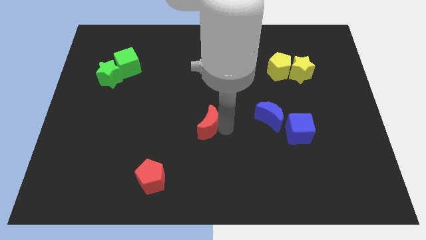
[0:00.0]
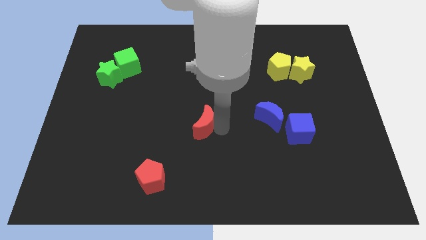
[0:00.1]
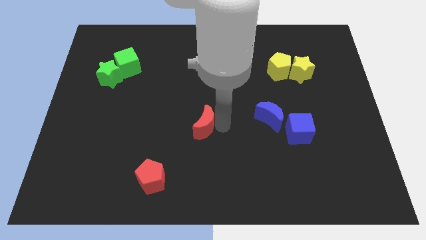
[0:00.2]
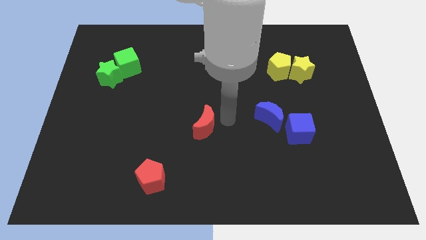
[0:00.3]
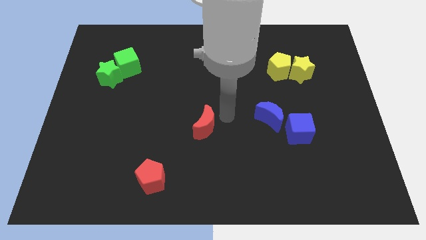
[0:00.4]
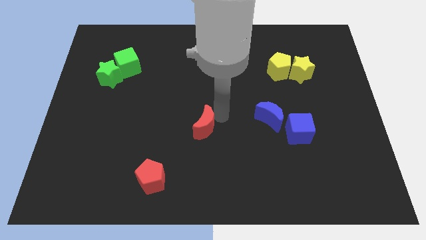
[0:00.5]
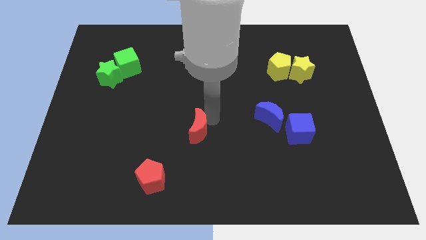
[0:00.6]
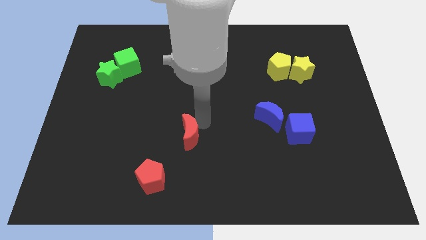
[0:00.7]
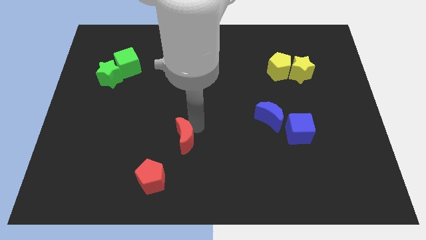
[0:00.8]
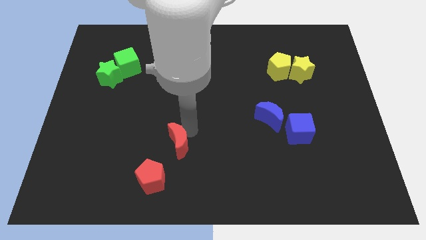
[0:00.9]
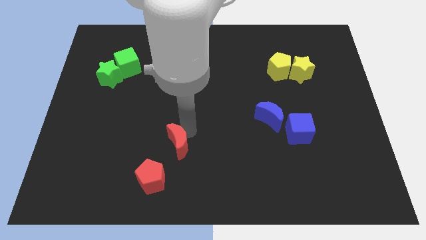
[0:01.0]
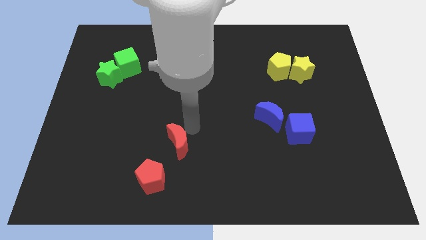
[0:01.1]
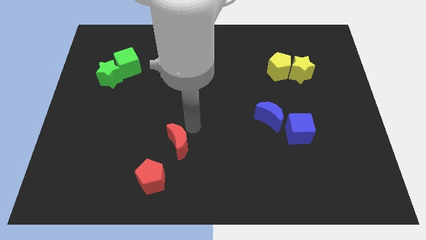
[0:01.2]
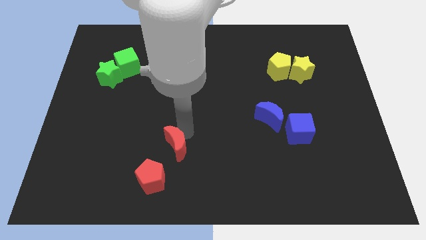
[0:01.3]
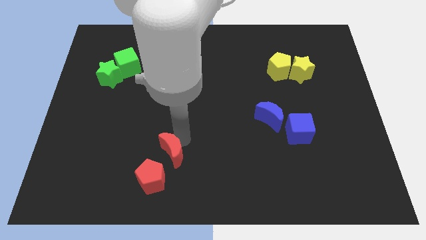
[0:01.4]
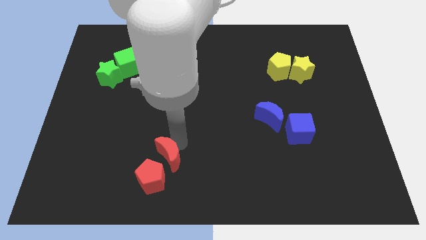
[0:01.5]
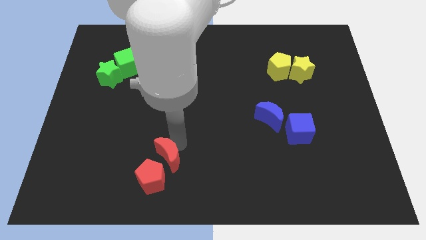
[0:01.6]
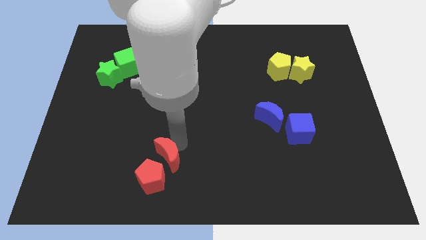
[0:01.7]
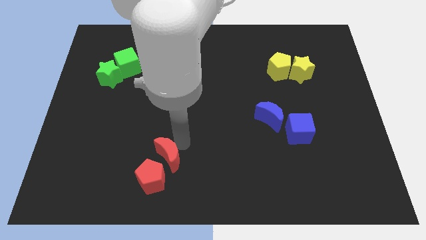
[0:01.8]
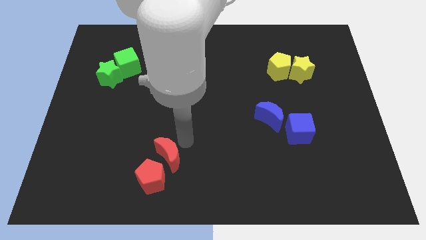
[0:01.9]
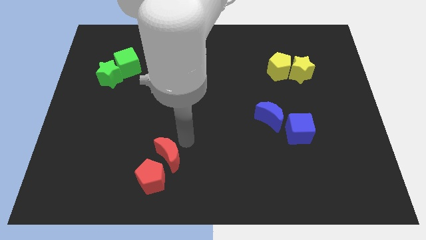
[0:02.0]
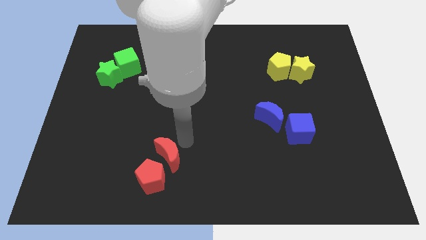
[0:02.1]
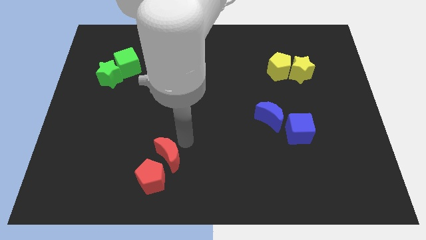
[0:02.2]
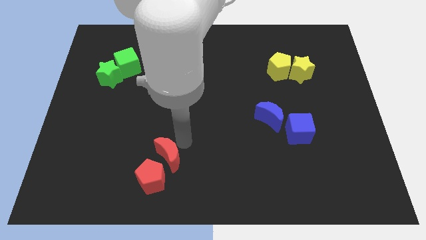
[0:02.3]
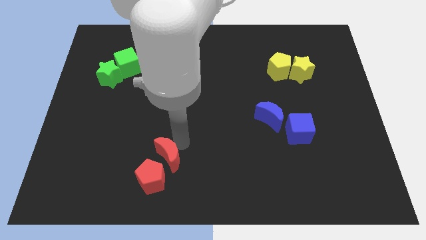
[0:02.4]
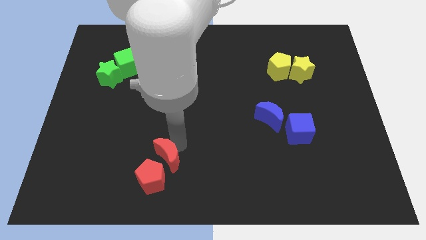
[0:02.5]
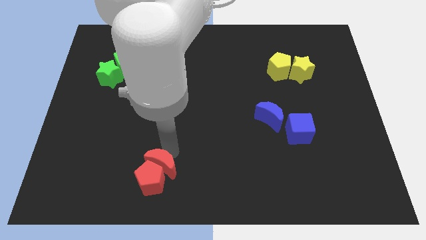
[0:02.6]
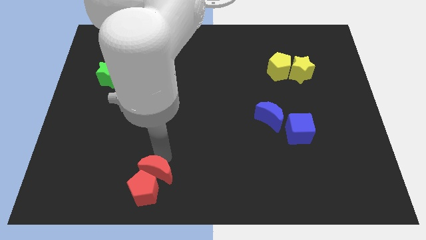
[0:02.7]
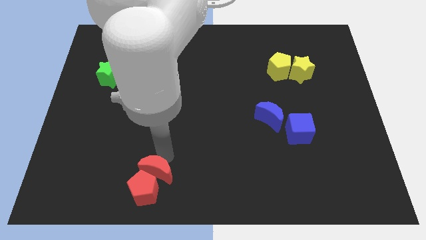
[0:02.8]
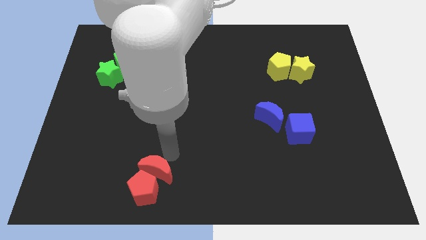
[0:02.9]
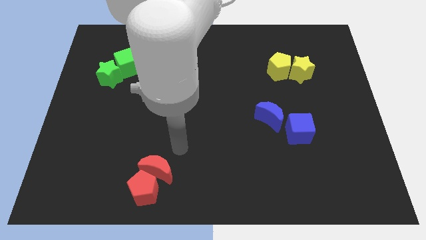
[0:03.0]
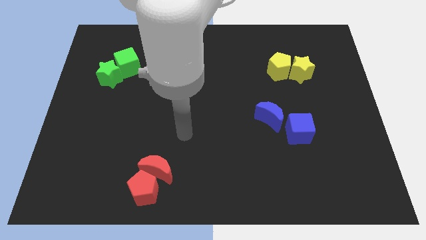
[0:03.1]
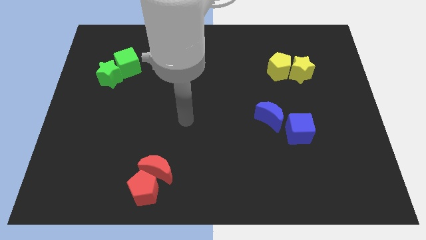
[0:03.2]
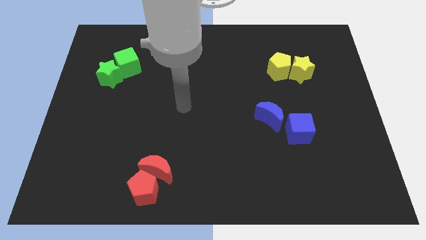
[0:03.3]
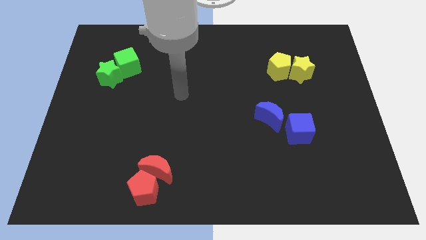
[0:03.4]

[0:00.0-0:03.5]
move the red blocks towards the bottom of the board

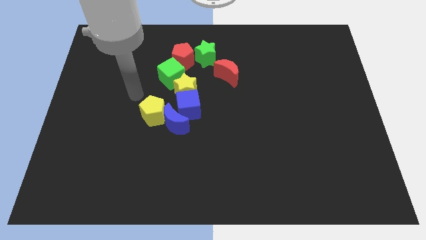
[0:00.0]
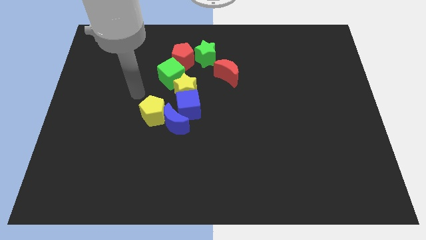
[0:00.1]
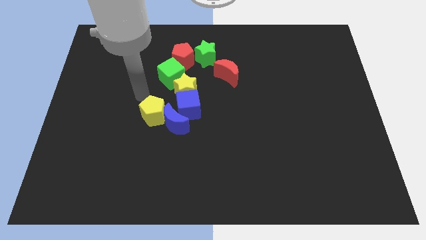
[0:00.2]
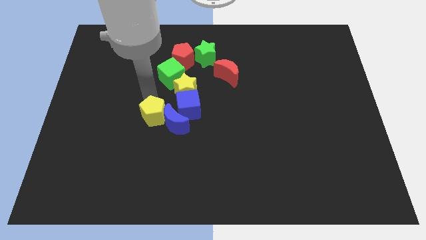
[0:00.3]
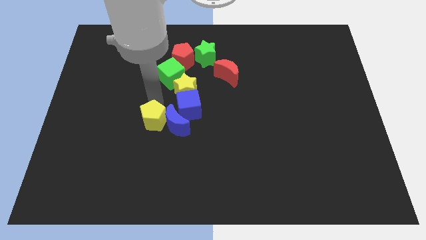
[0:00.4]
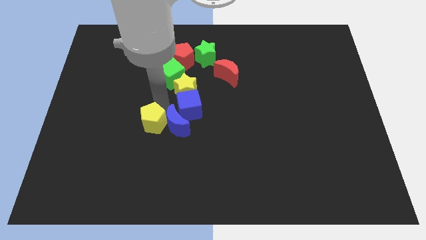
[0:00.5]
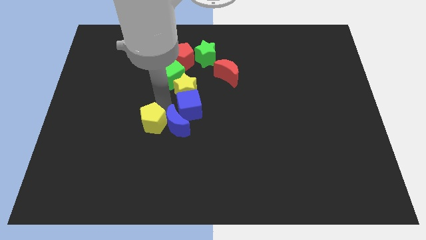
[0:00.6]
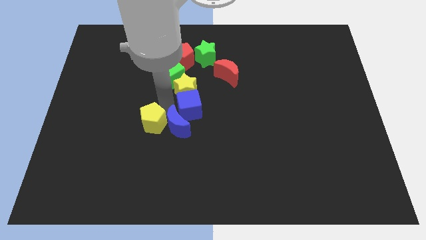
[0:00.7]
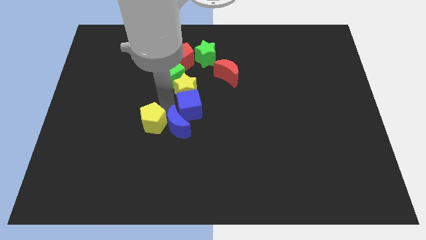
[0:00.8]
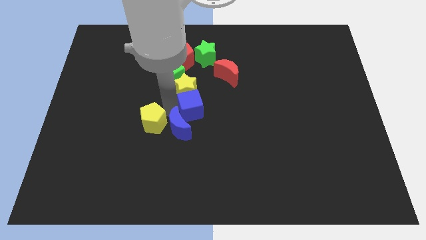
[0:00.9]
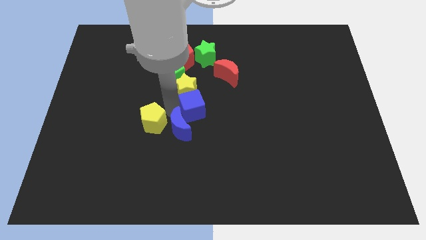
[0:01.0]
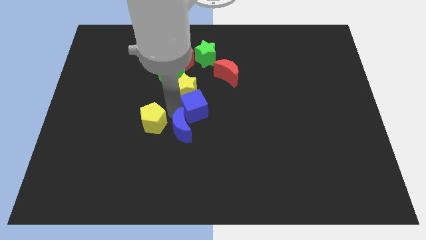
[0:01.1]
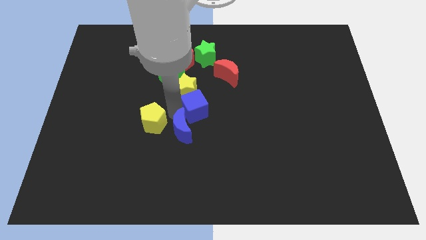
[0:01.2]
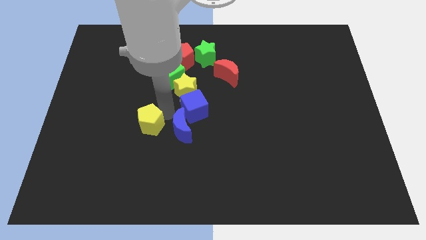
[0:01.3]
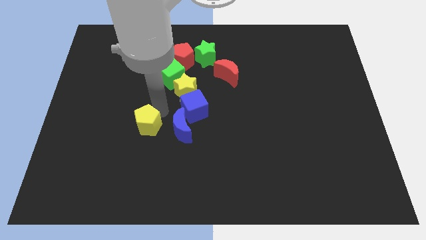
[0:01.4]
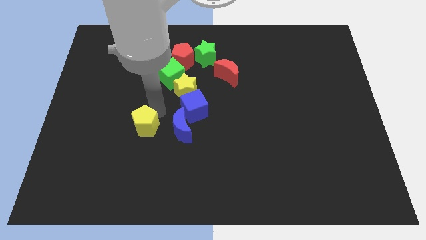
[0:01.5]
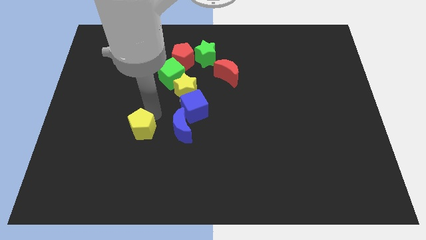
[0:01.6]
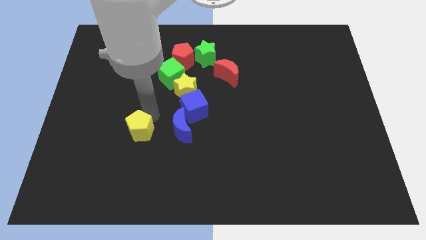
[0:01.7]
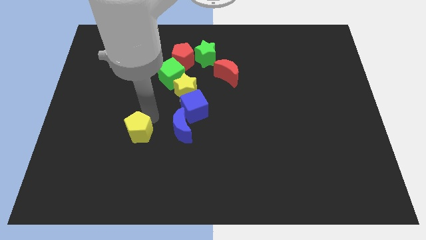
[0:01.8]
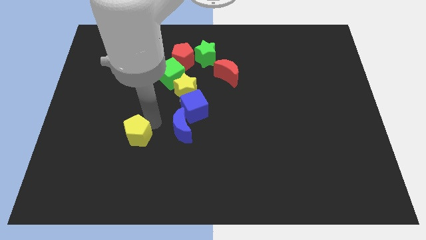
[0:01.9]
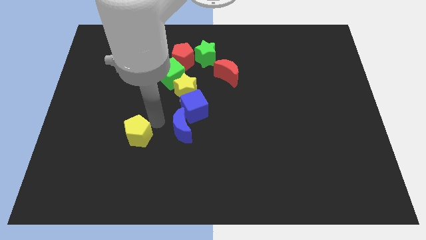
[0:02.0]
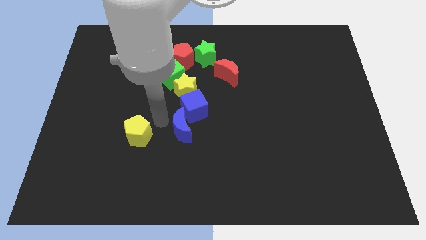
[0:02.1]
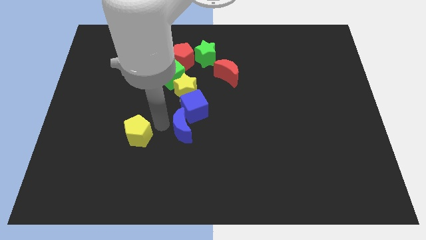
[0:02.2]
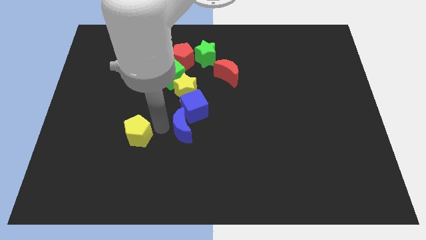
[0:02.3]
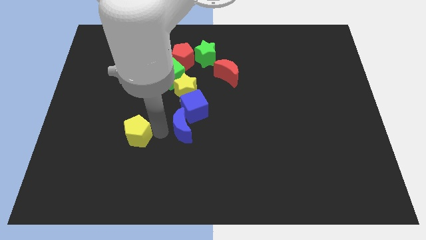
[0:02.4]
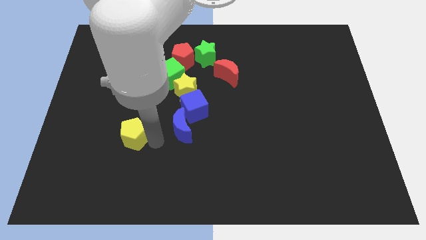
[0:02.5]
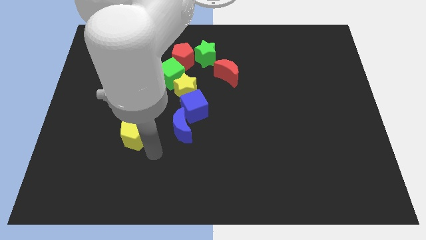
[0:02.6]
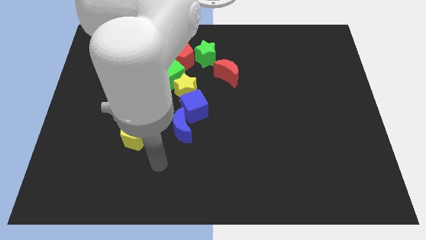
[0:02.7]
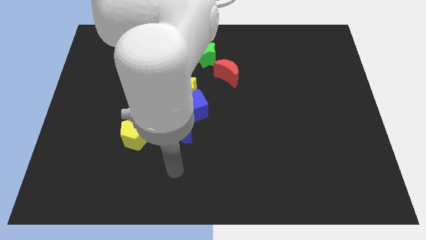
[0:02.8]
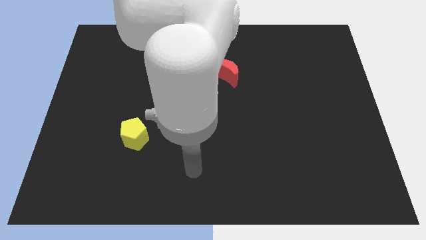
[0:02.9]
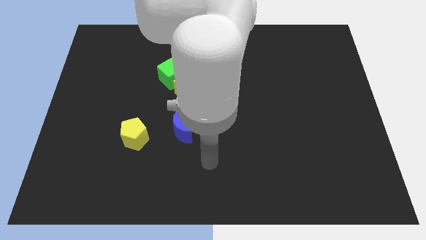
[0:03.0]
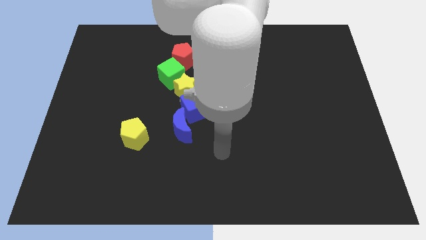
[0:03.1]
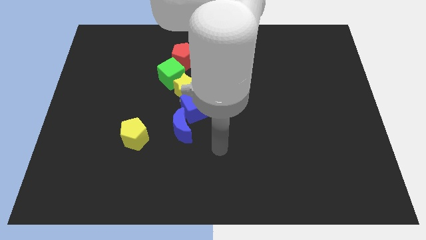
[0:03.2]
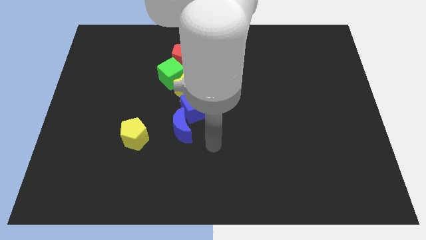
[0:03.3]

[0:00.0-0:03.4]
separate yellow pentagon and blue moon

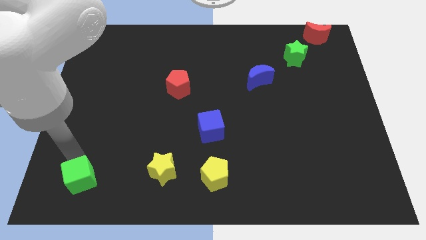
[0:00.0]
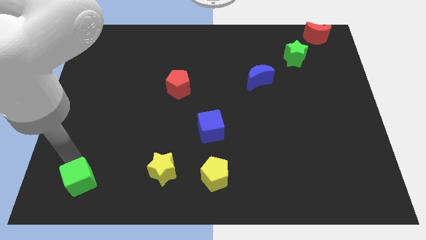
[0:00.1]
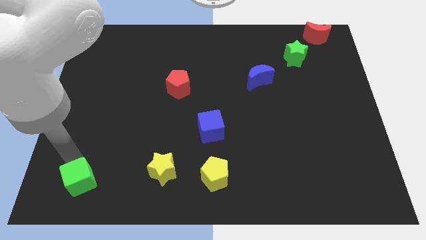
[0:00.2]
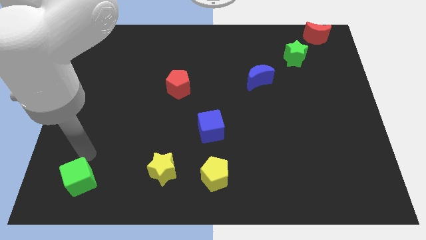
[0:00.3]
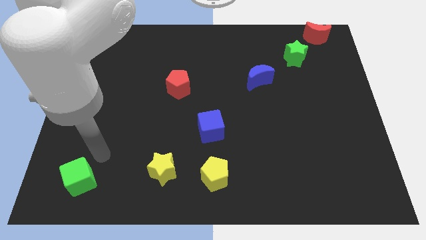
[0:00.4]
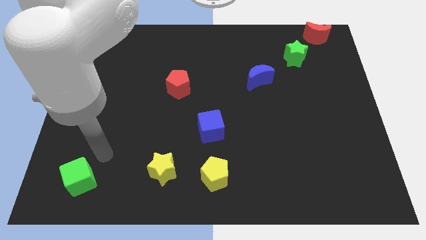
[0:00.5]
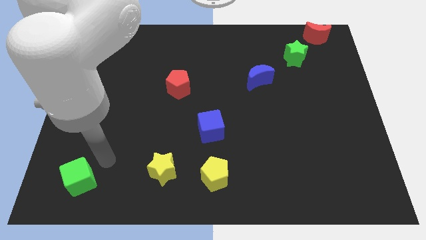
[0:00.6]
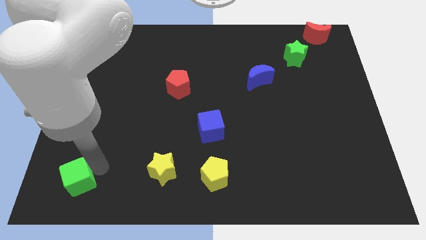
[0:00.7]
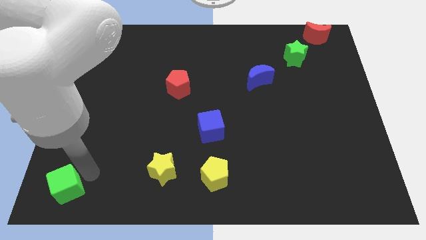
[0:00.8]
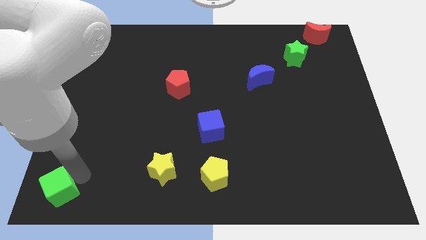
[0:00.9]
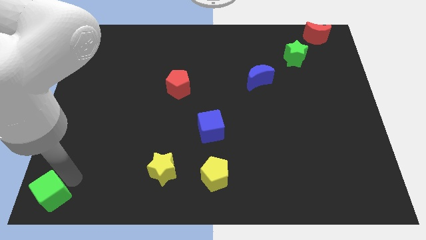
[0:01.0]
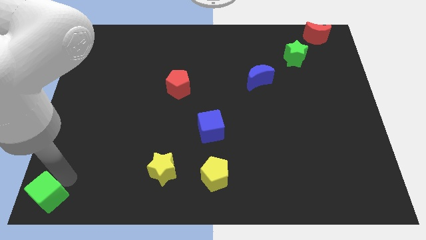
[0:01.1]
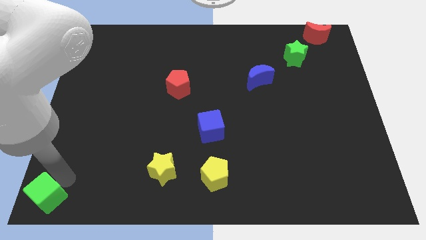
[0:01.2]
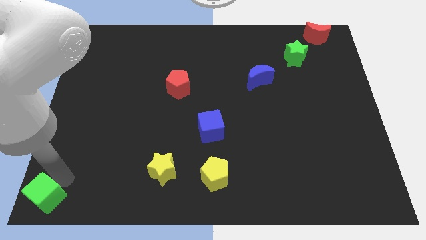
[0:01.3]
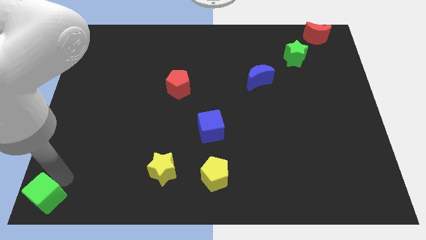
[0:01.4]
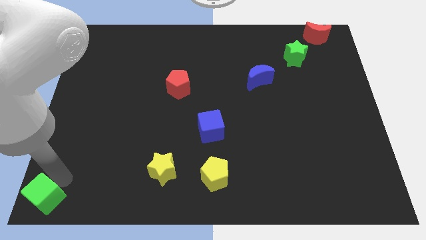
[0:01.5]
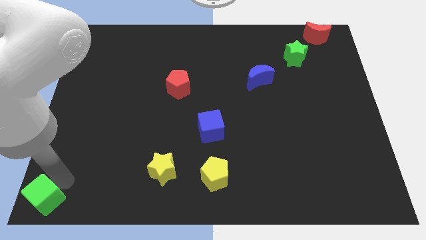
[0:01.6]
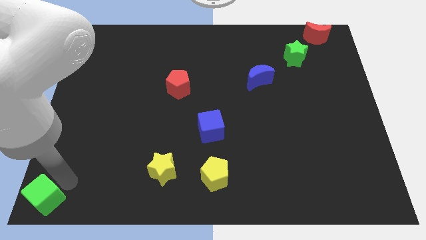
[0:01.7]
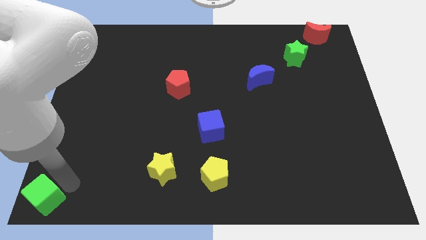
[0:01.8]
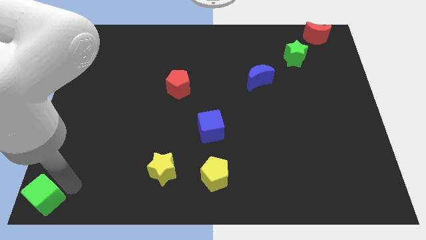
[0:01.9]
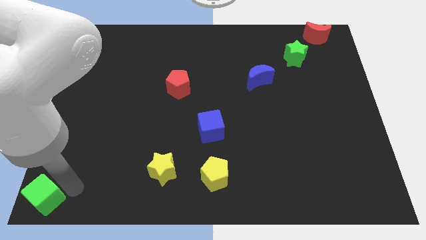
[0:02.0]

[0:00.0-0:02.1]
slide green cube to bottom left corner
